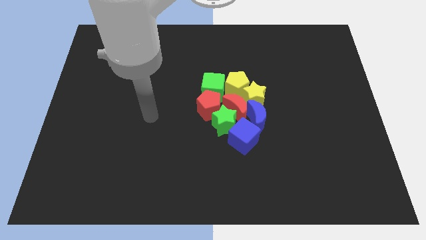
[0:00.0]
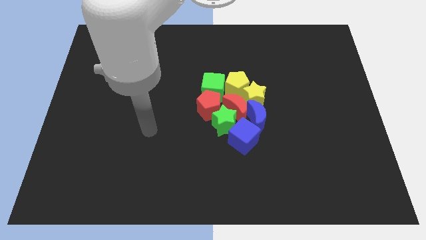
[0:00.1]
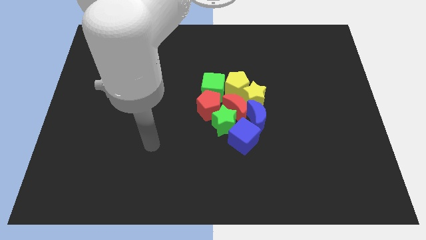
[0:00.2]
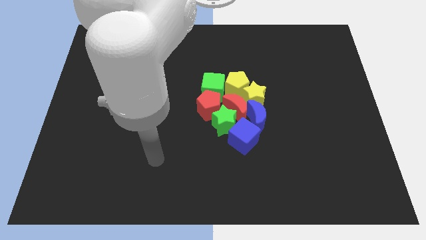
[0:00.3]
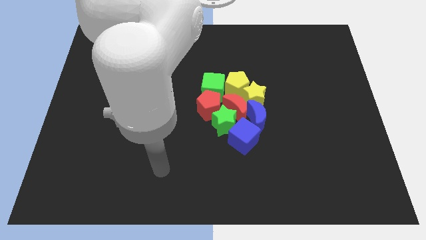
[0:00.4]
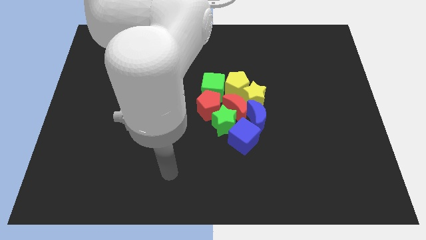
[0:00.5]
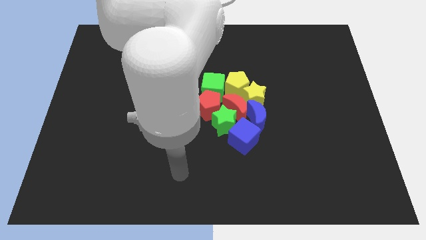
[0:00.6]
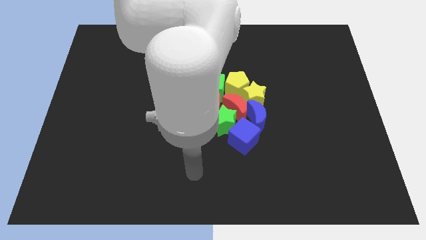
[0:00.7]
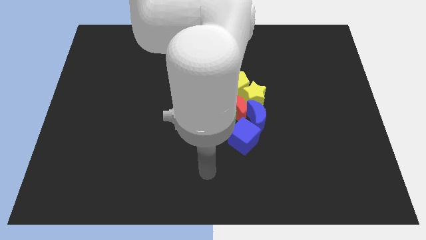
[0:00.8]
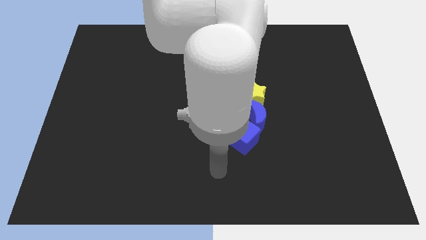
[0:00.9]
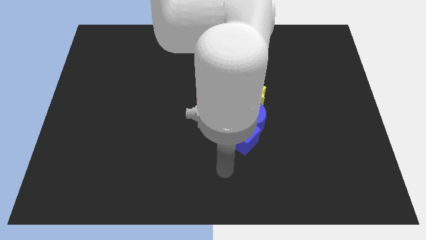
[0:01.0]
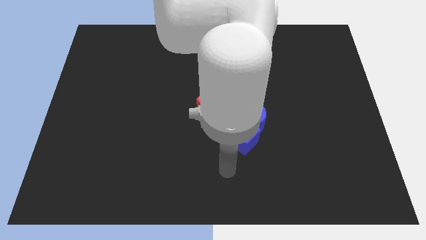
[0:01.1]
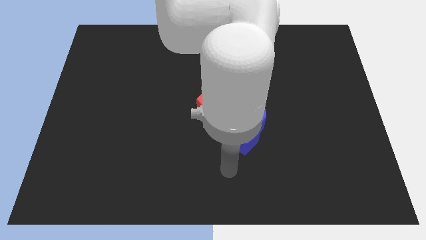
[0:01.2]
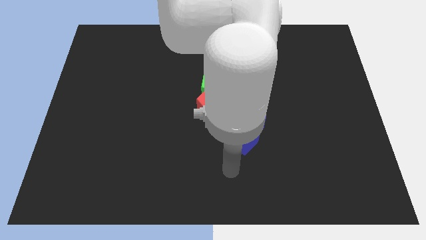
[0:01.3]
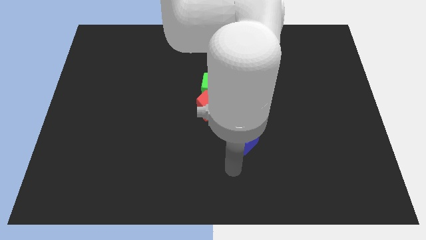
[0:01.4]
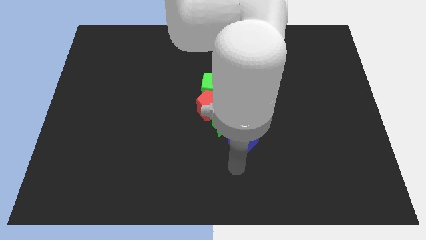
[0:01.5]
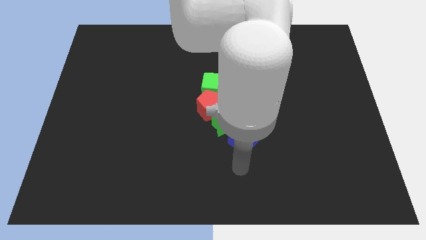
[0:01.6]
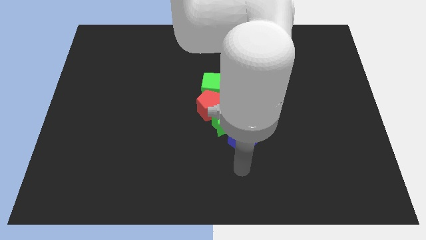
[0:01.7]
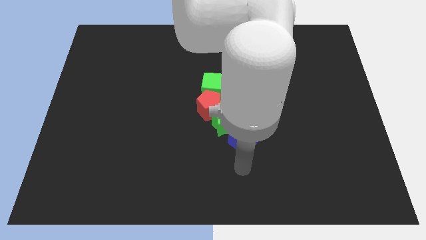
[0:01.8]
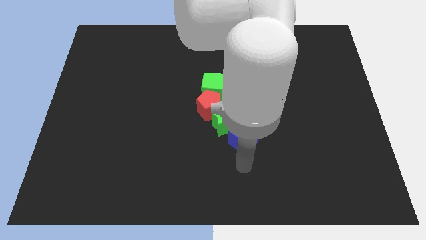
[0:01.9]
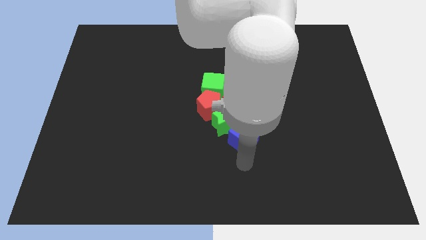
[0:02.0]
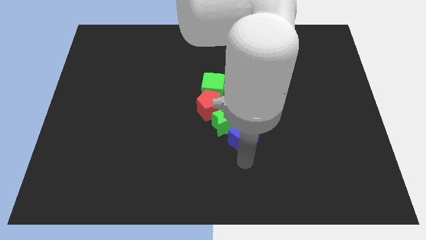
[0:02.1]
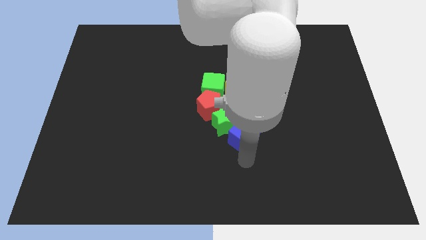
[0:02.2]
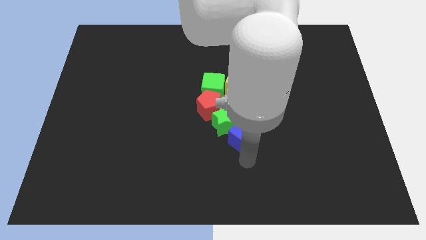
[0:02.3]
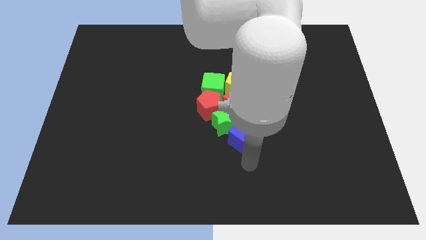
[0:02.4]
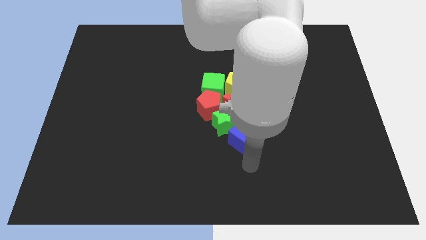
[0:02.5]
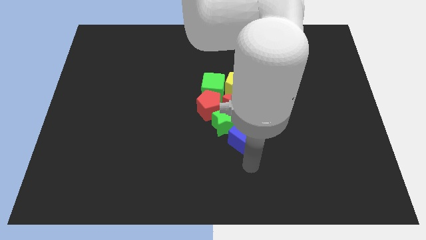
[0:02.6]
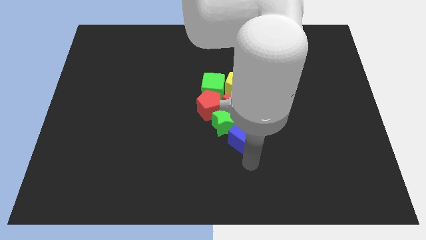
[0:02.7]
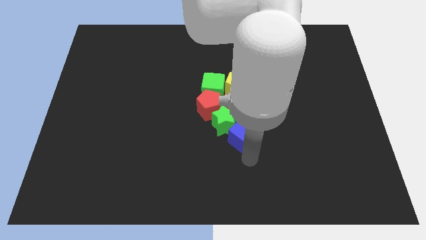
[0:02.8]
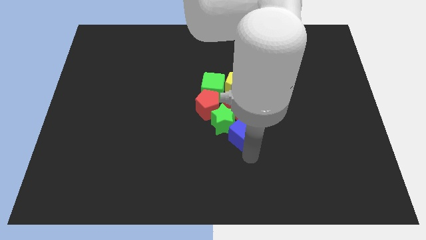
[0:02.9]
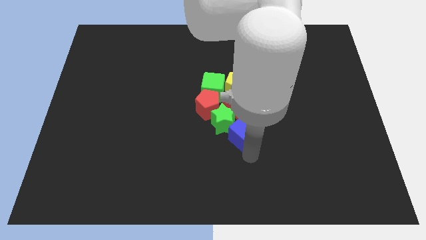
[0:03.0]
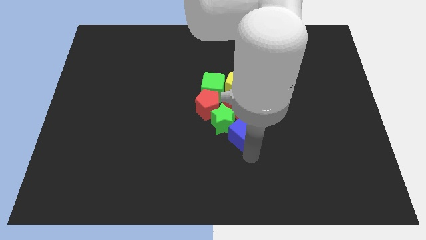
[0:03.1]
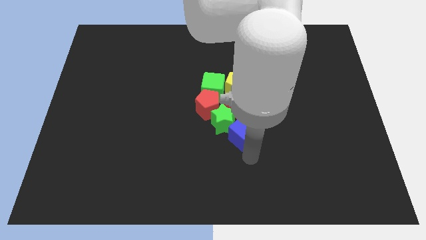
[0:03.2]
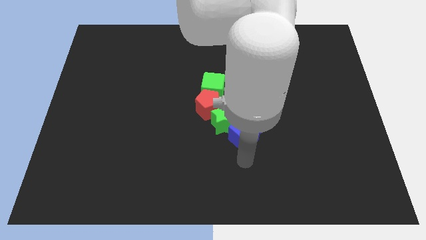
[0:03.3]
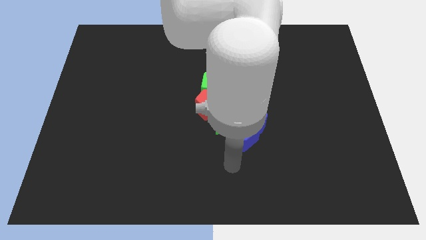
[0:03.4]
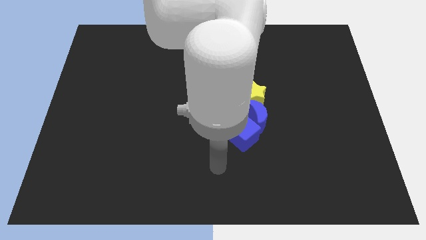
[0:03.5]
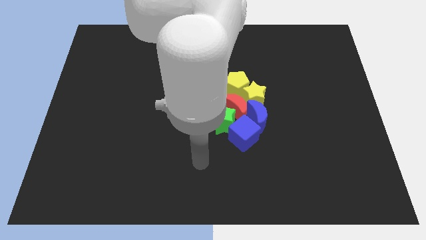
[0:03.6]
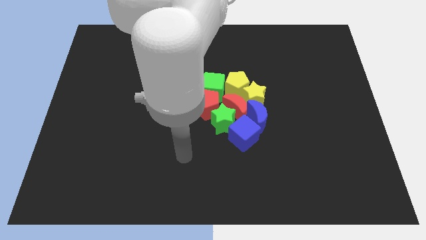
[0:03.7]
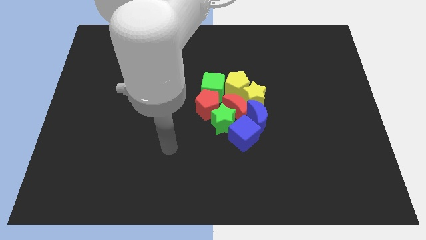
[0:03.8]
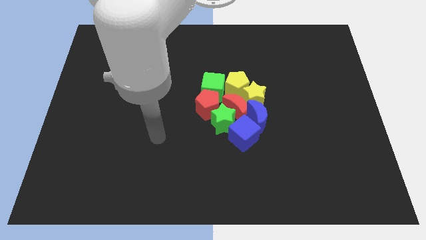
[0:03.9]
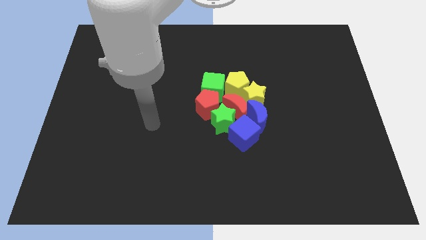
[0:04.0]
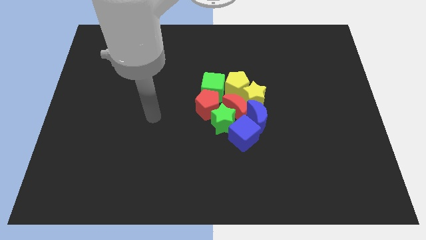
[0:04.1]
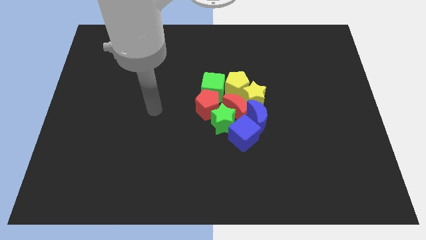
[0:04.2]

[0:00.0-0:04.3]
slightly push the blue cube up

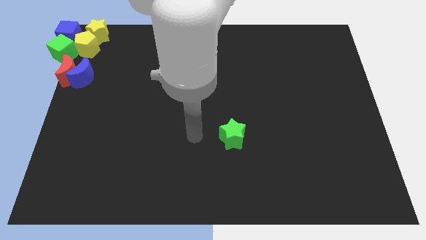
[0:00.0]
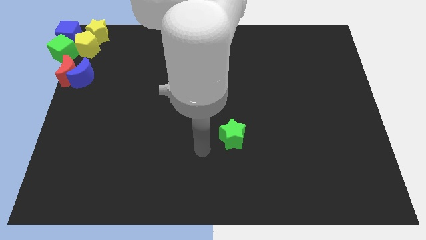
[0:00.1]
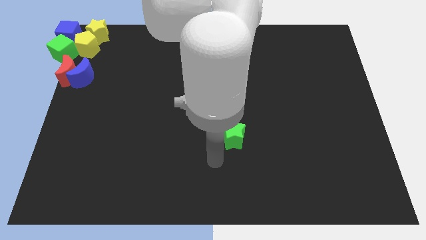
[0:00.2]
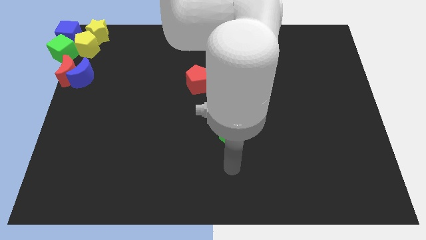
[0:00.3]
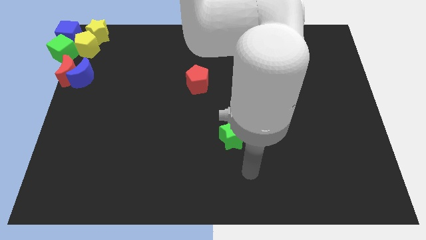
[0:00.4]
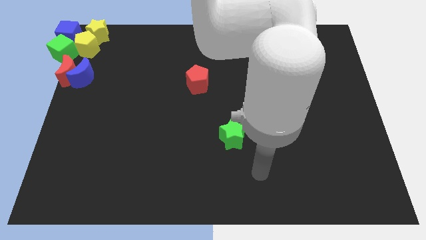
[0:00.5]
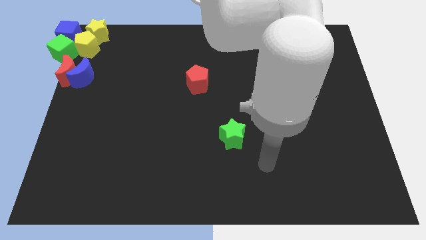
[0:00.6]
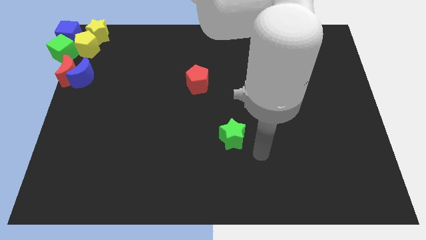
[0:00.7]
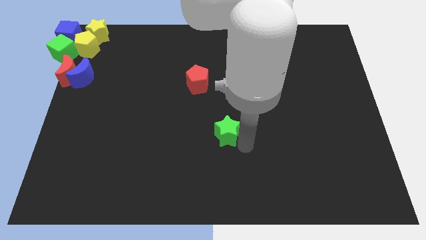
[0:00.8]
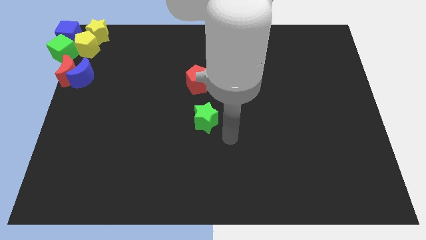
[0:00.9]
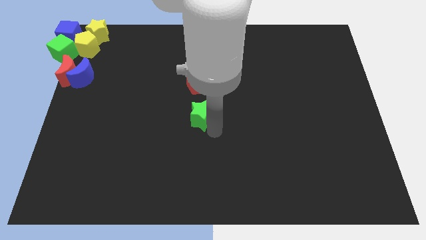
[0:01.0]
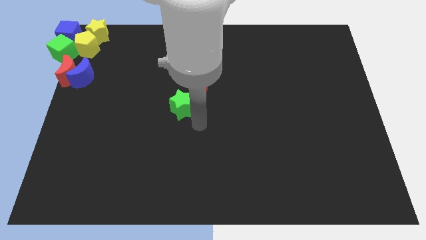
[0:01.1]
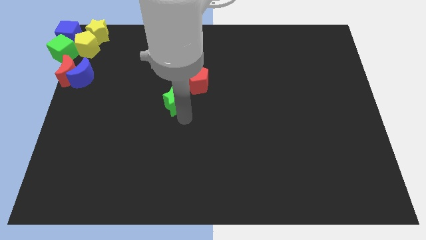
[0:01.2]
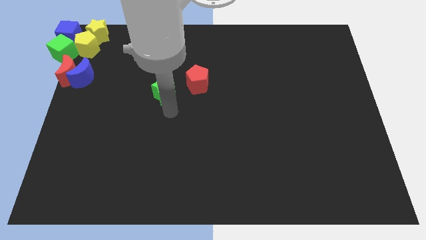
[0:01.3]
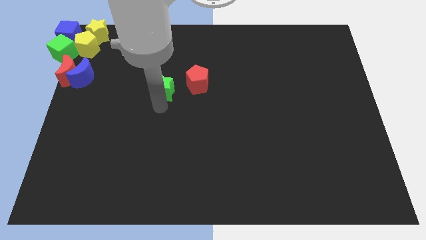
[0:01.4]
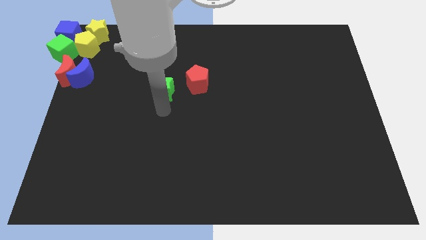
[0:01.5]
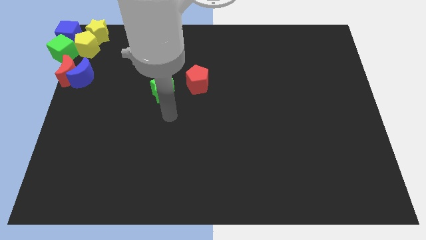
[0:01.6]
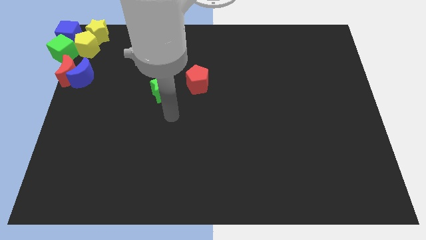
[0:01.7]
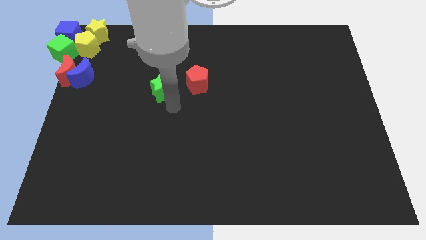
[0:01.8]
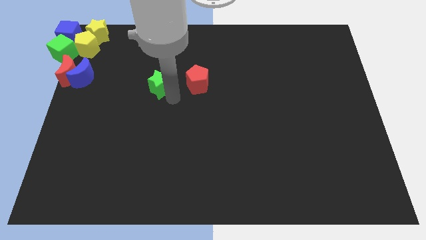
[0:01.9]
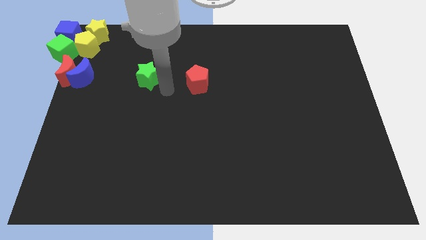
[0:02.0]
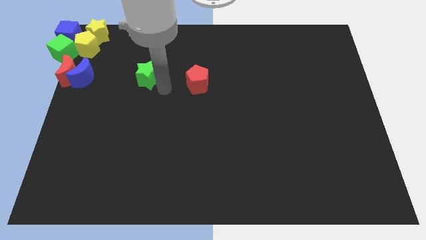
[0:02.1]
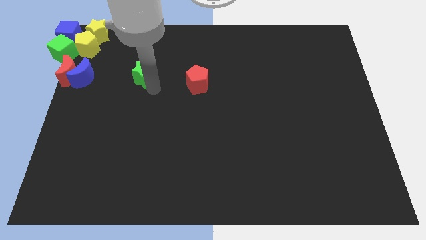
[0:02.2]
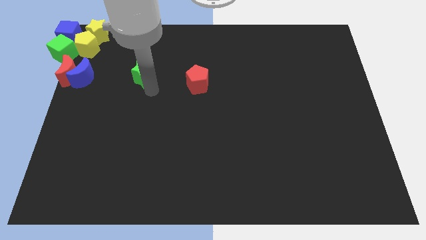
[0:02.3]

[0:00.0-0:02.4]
push the green star towards the group of blocks

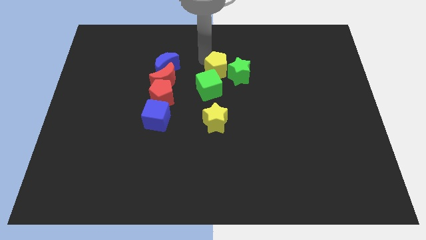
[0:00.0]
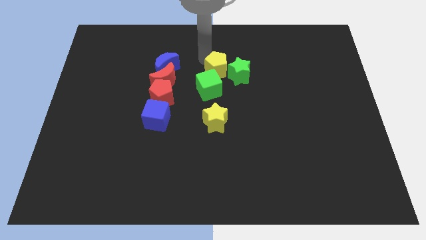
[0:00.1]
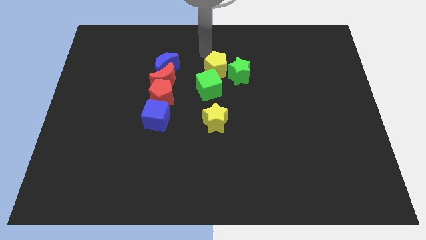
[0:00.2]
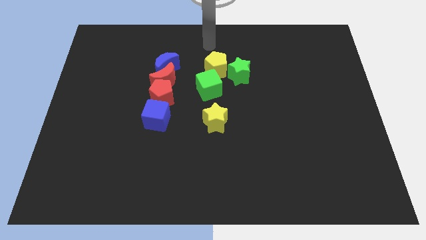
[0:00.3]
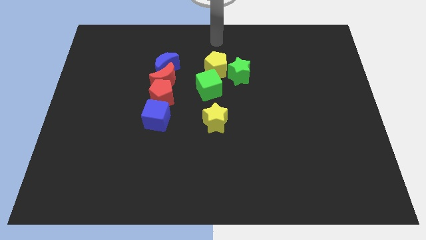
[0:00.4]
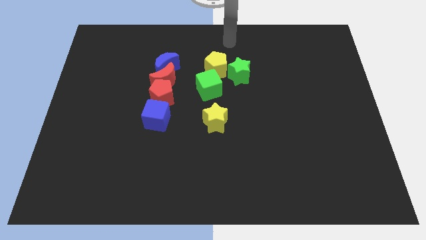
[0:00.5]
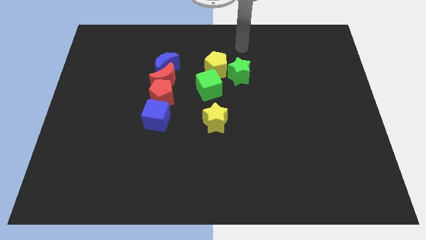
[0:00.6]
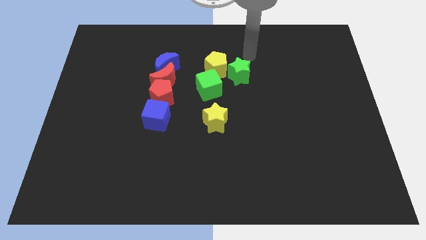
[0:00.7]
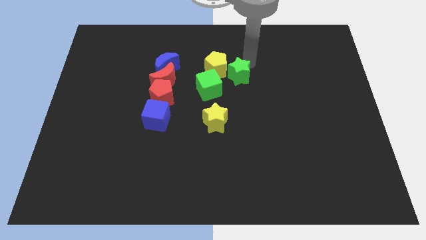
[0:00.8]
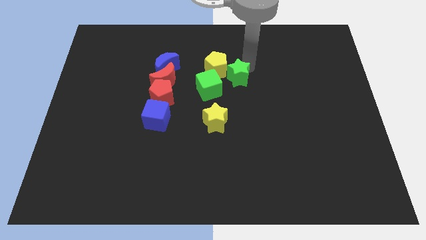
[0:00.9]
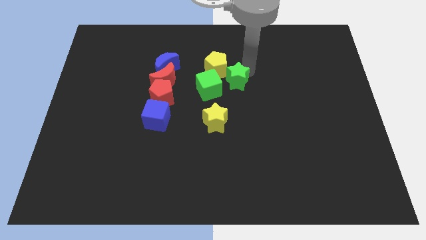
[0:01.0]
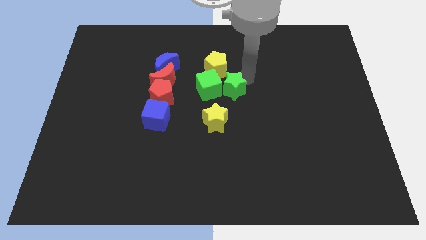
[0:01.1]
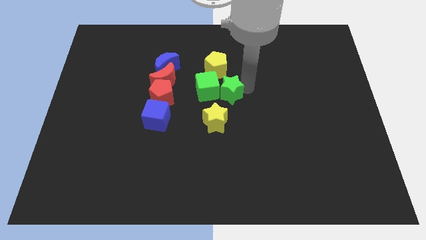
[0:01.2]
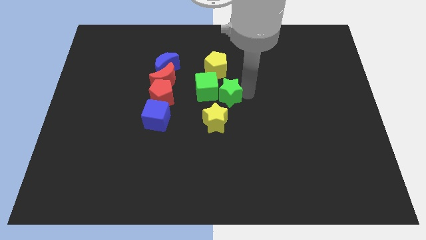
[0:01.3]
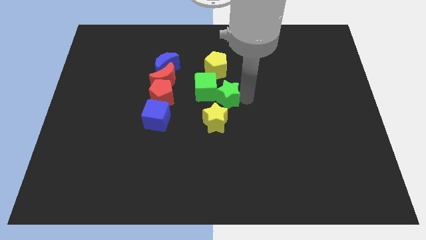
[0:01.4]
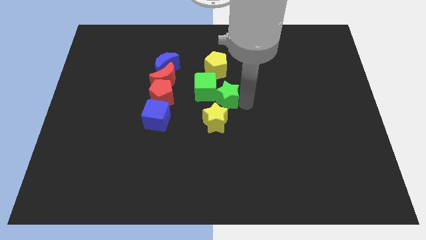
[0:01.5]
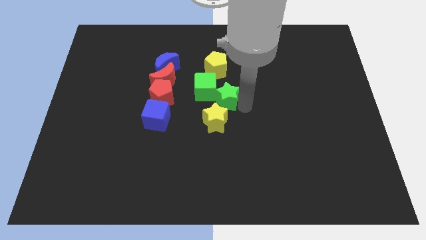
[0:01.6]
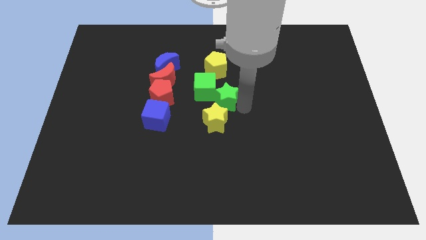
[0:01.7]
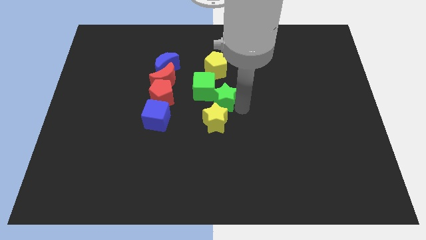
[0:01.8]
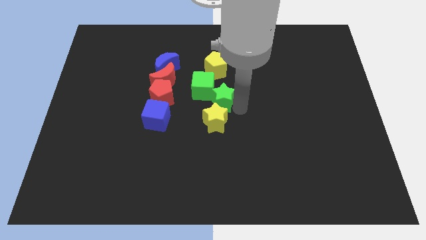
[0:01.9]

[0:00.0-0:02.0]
move the green star close to yellow star

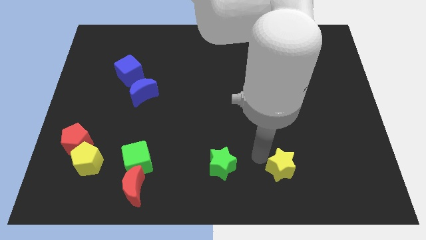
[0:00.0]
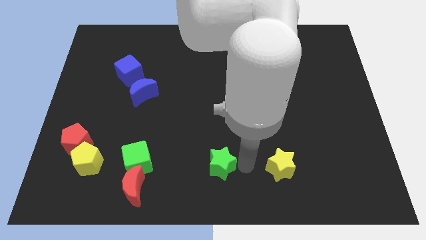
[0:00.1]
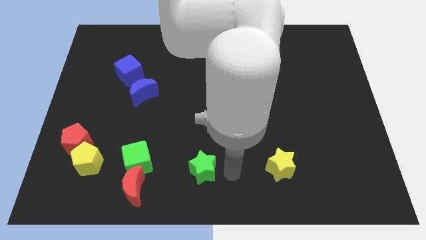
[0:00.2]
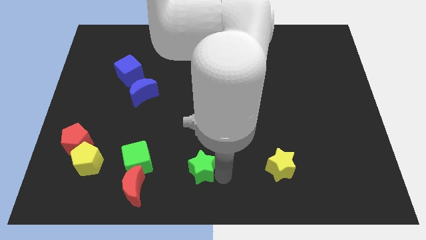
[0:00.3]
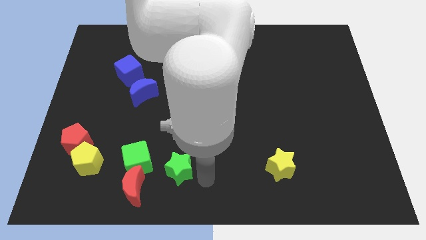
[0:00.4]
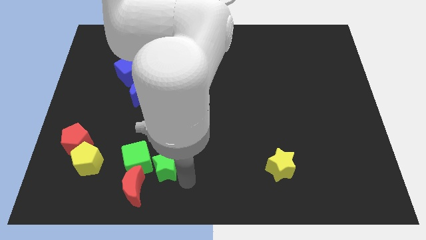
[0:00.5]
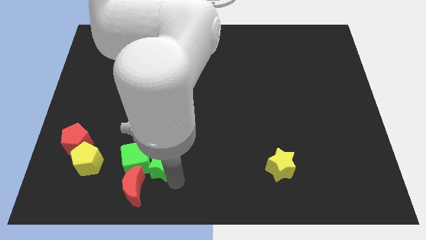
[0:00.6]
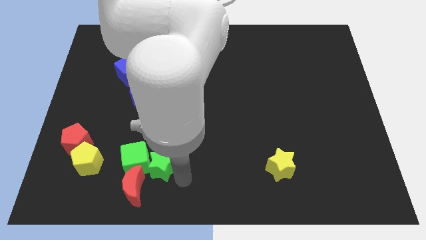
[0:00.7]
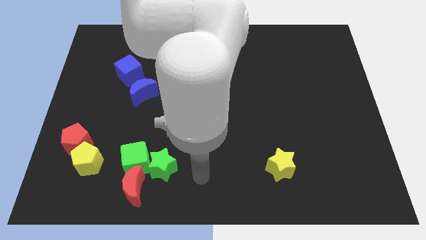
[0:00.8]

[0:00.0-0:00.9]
push green star in green cube
